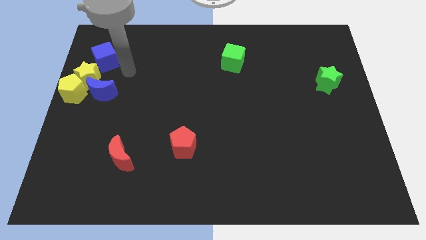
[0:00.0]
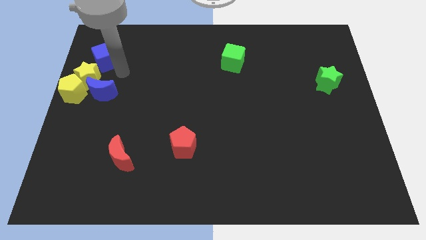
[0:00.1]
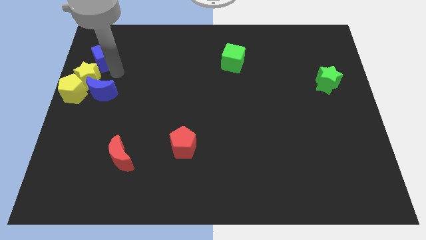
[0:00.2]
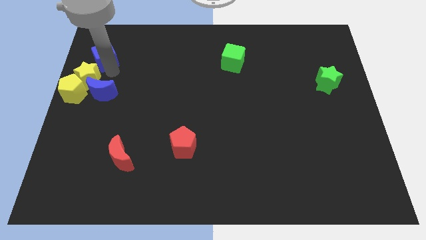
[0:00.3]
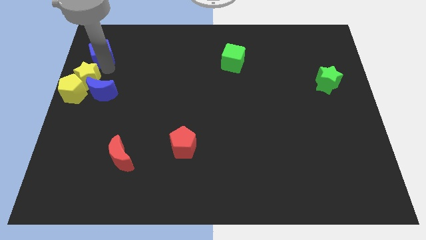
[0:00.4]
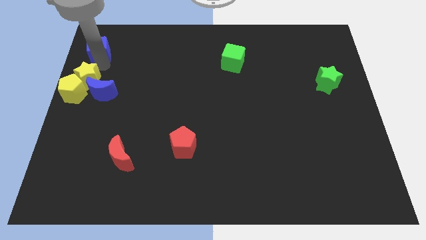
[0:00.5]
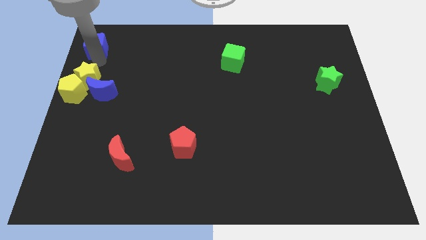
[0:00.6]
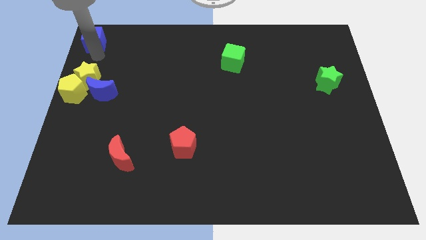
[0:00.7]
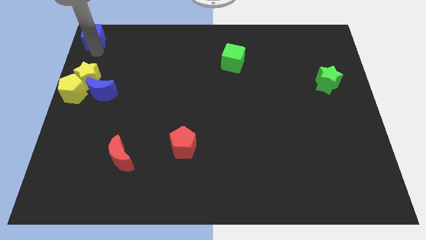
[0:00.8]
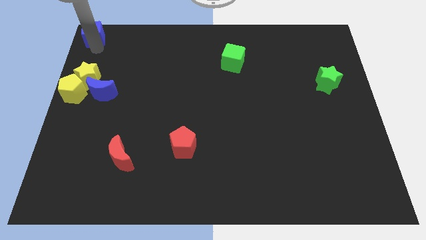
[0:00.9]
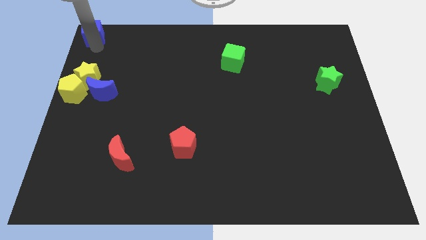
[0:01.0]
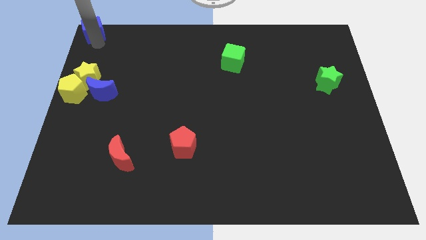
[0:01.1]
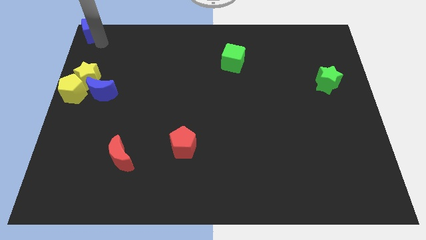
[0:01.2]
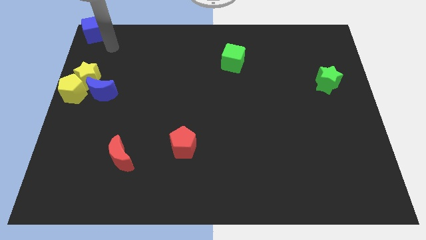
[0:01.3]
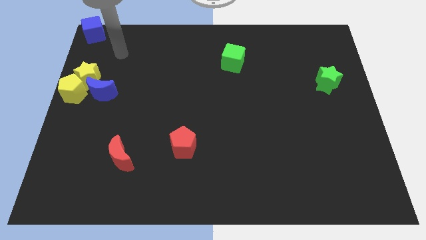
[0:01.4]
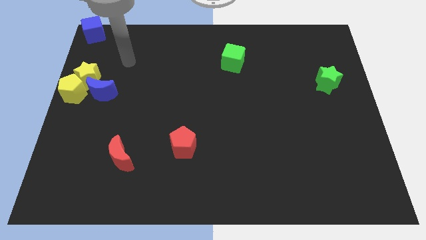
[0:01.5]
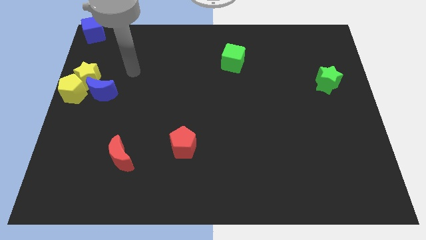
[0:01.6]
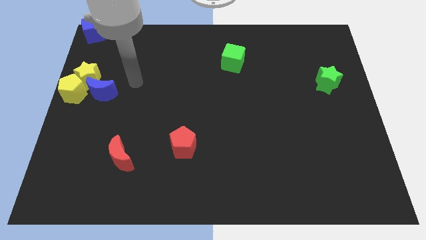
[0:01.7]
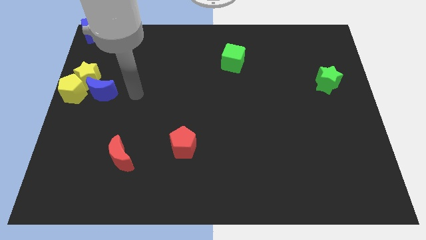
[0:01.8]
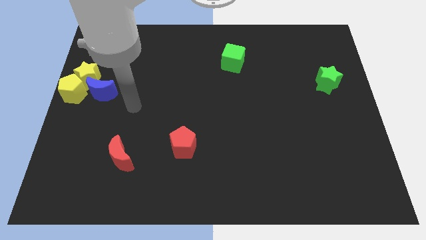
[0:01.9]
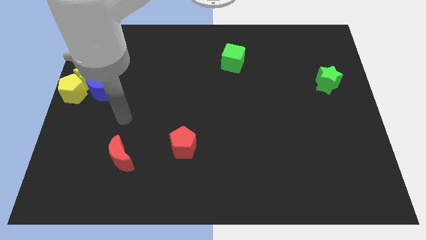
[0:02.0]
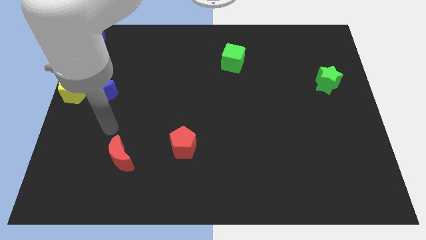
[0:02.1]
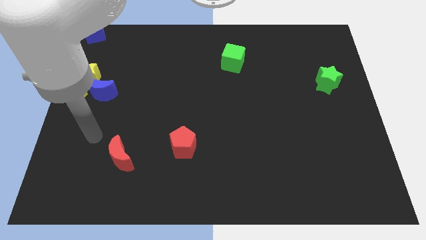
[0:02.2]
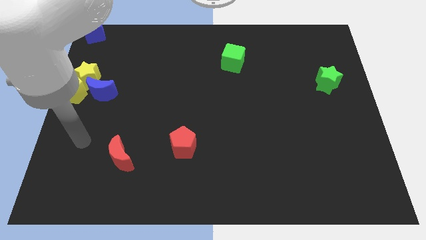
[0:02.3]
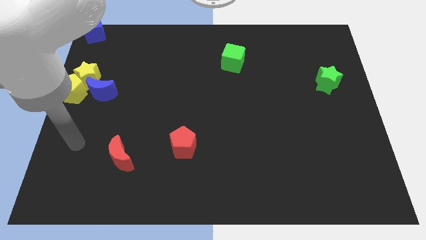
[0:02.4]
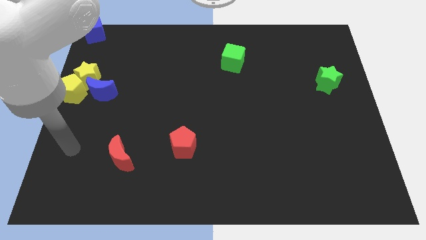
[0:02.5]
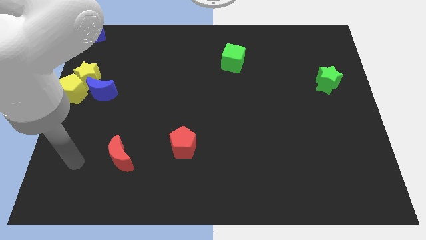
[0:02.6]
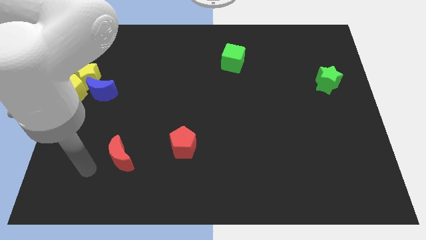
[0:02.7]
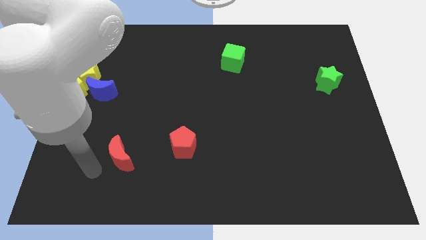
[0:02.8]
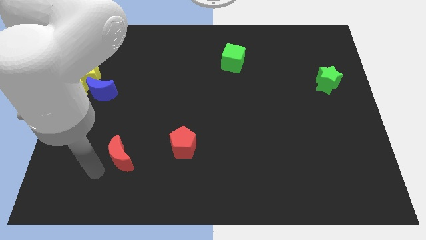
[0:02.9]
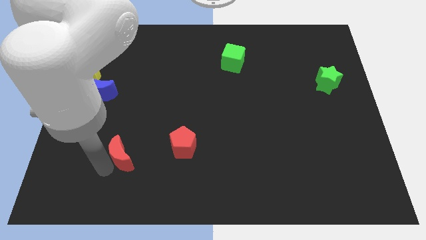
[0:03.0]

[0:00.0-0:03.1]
place the blue cube to the top left corner

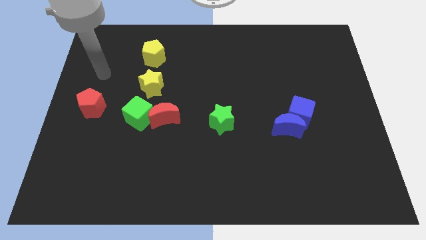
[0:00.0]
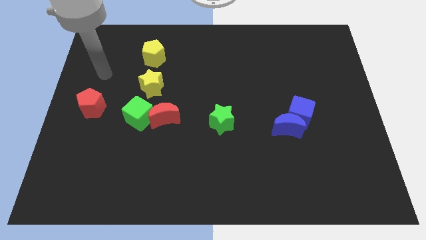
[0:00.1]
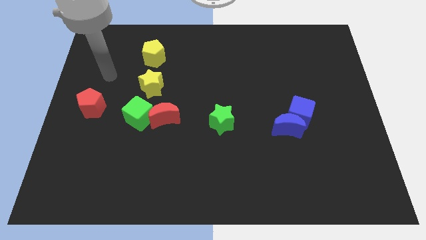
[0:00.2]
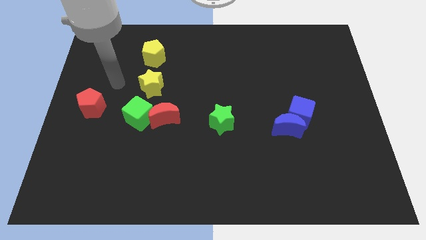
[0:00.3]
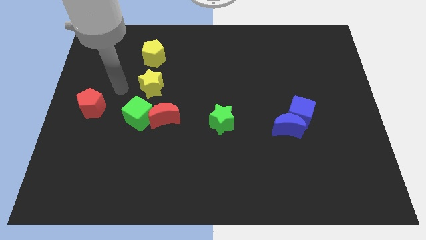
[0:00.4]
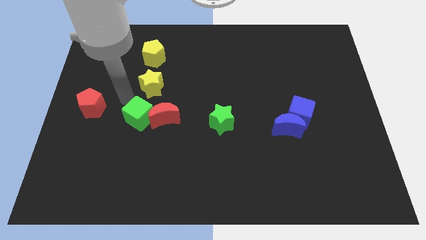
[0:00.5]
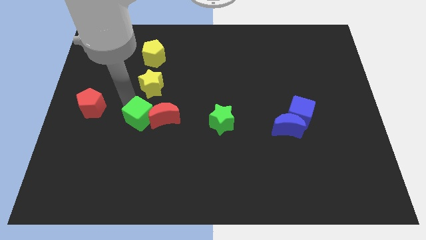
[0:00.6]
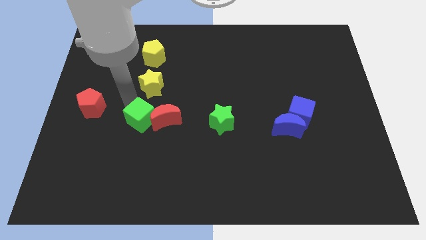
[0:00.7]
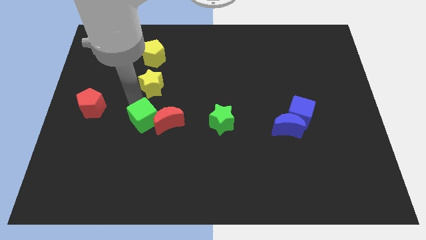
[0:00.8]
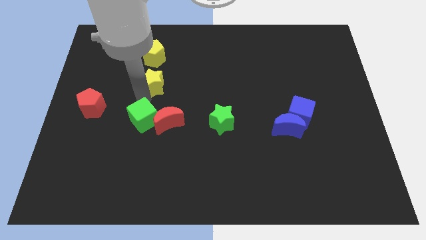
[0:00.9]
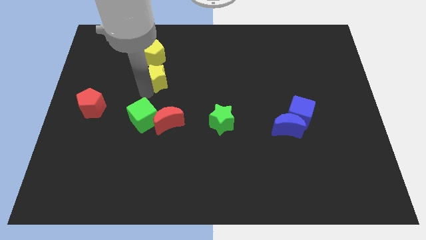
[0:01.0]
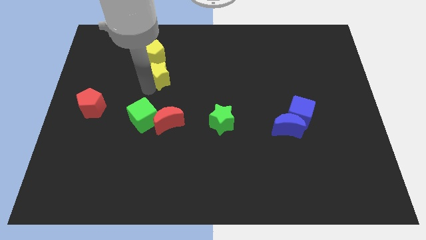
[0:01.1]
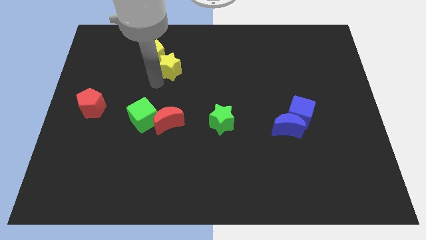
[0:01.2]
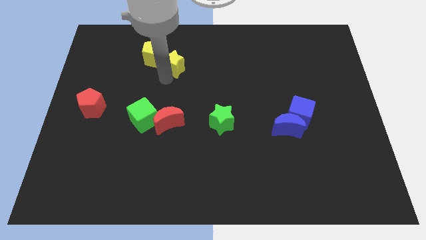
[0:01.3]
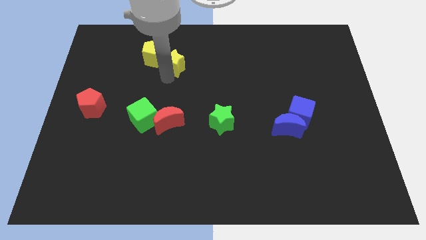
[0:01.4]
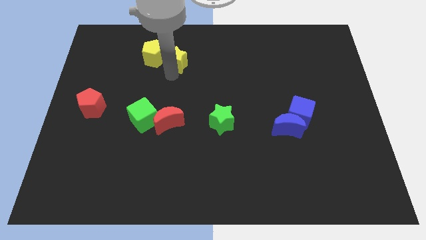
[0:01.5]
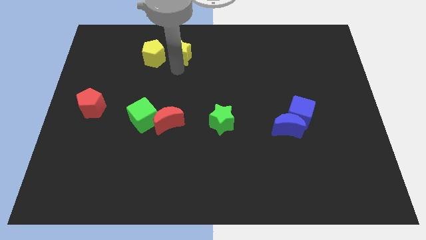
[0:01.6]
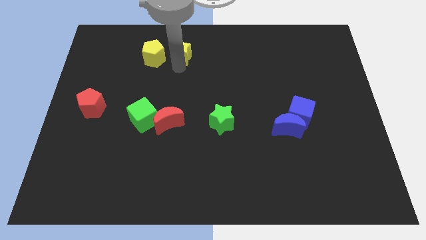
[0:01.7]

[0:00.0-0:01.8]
place the yellow star to the right of the yellow pentagon

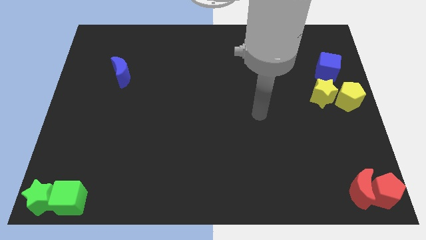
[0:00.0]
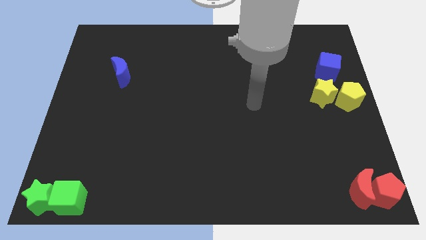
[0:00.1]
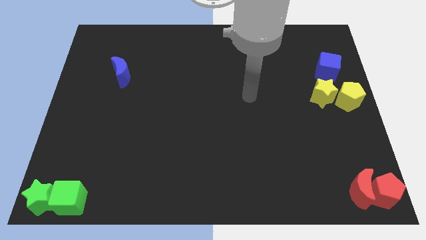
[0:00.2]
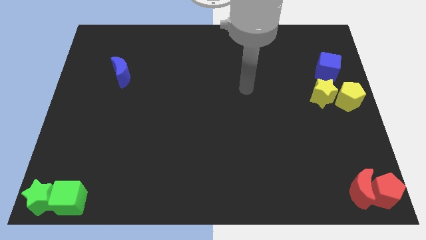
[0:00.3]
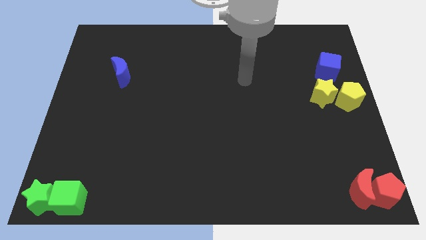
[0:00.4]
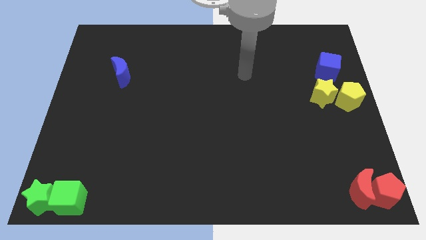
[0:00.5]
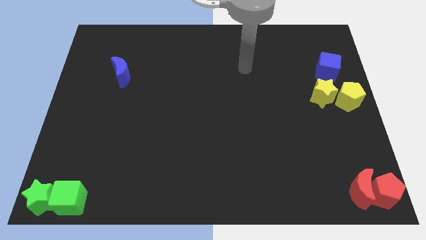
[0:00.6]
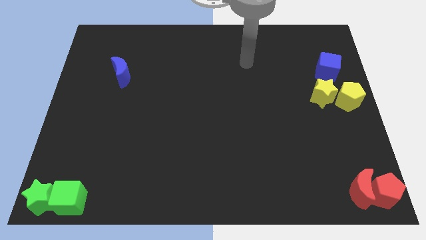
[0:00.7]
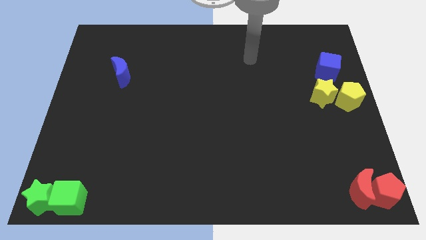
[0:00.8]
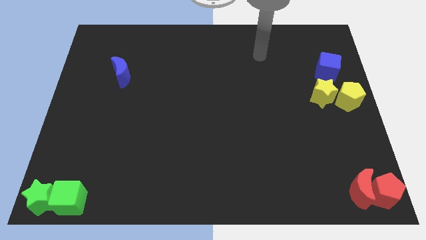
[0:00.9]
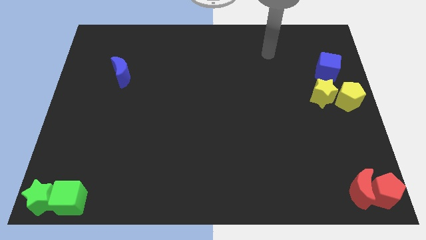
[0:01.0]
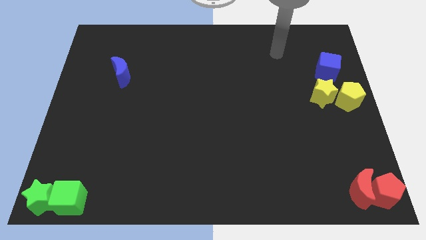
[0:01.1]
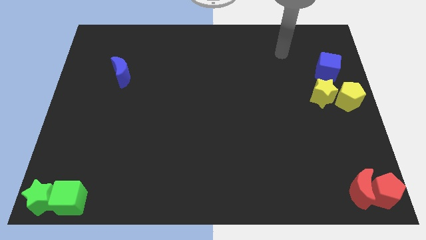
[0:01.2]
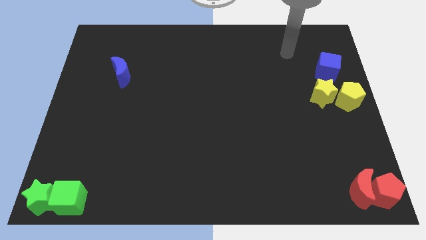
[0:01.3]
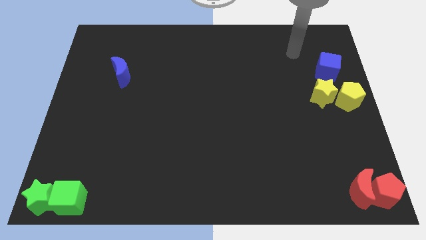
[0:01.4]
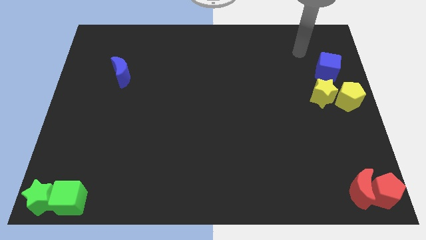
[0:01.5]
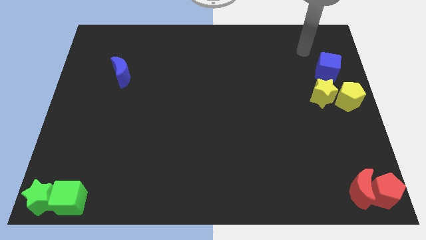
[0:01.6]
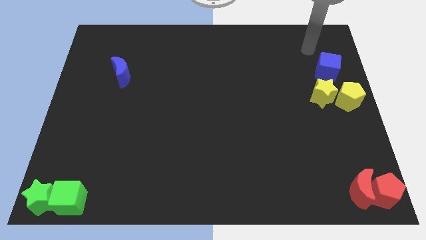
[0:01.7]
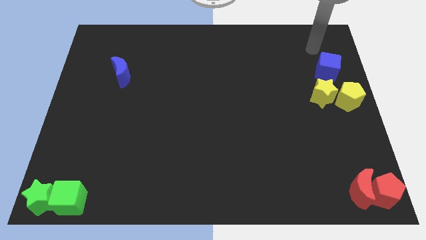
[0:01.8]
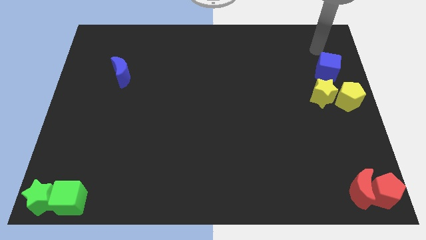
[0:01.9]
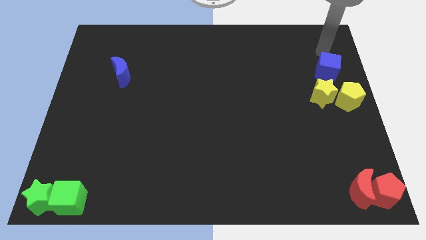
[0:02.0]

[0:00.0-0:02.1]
move your hand towards the top blue cube

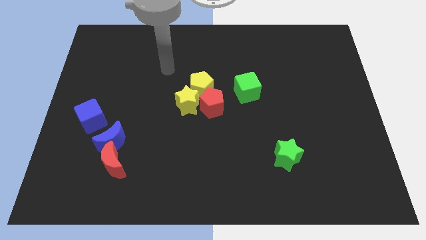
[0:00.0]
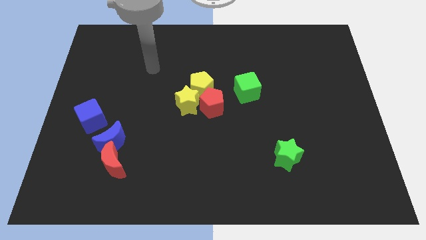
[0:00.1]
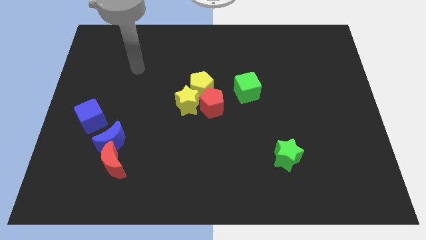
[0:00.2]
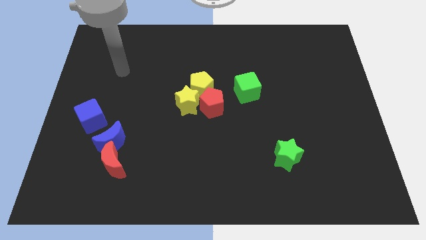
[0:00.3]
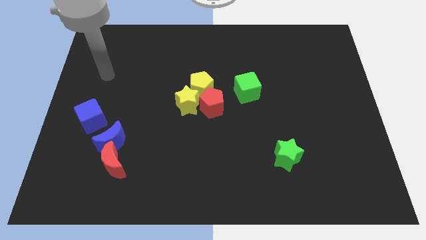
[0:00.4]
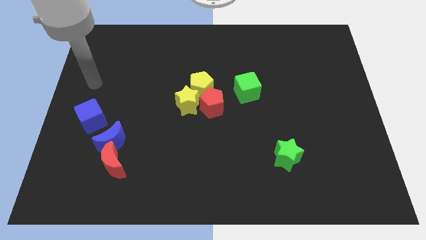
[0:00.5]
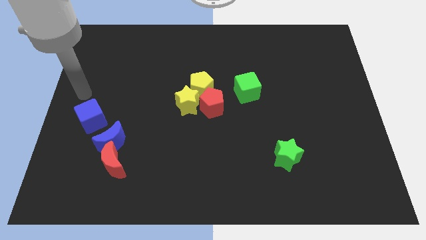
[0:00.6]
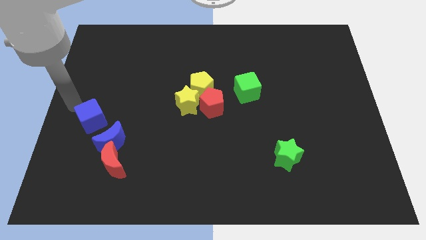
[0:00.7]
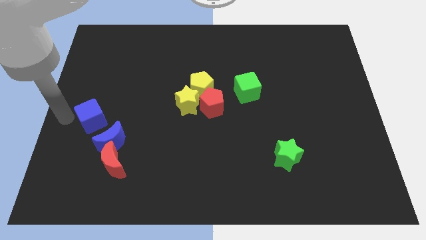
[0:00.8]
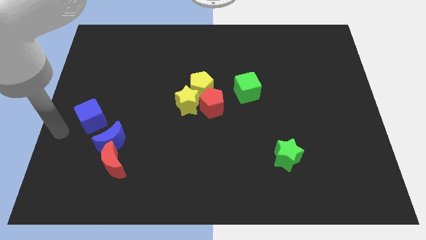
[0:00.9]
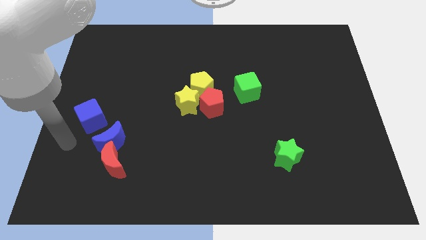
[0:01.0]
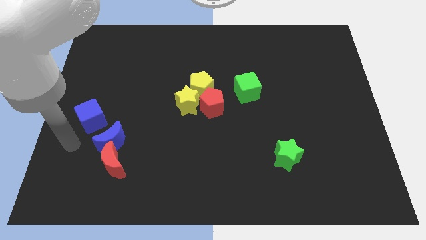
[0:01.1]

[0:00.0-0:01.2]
move your hand to the left of the blue cube

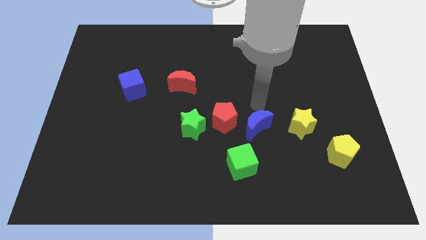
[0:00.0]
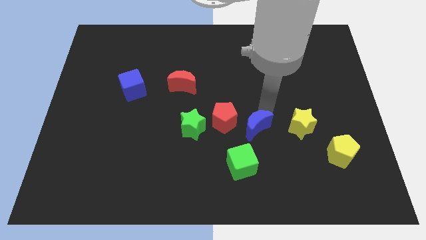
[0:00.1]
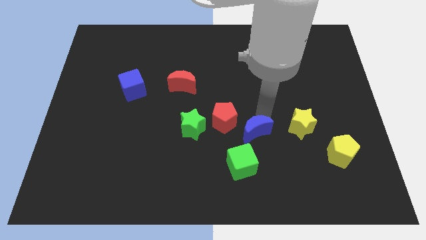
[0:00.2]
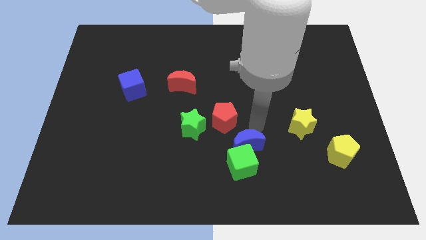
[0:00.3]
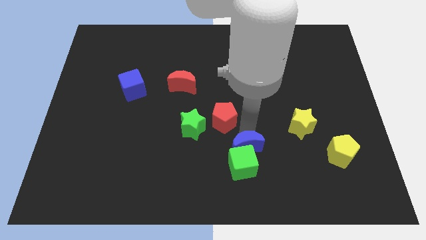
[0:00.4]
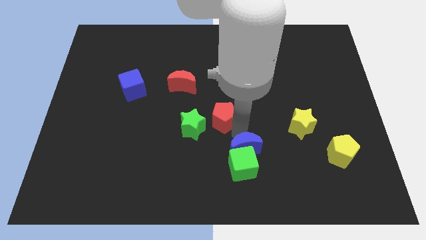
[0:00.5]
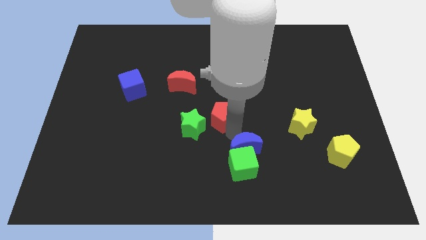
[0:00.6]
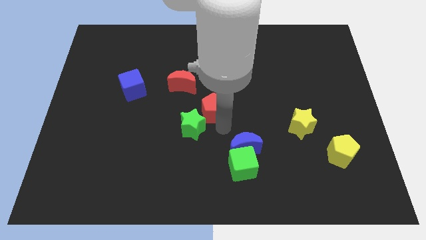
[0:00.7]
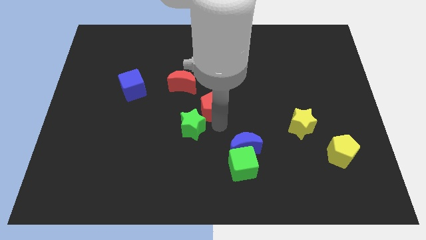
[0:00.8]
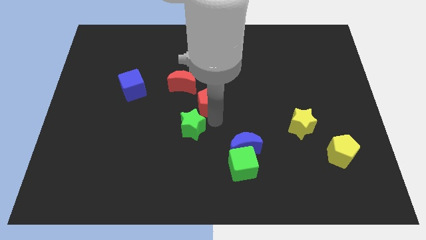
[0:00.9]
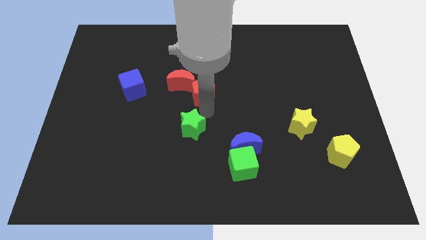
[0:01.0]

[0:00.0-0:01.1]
separate red pentagon and blue moon from each other
